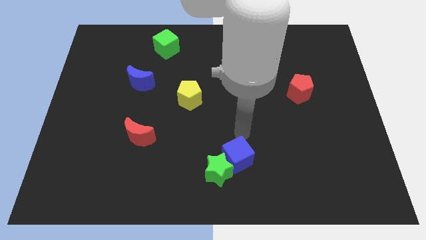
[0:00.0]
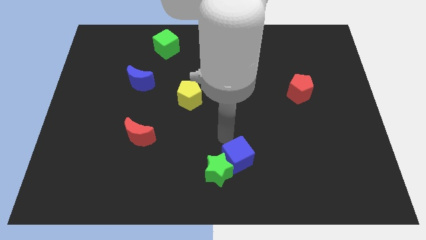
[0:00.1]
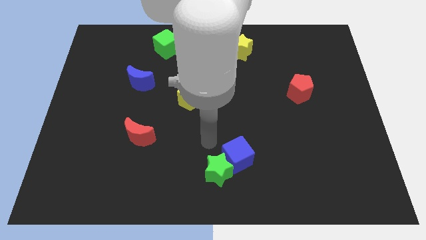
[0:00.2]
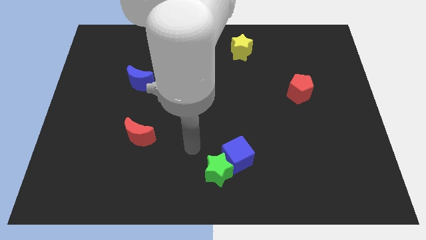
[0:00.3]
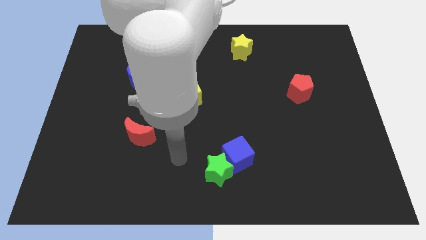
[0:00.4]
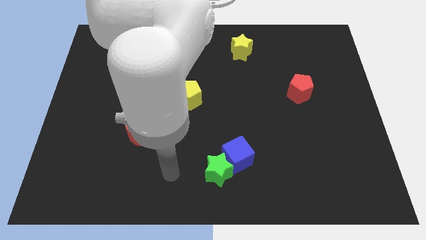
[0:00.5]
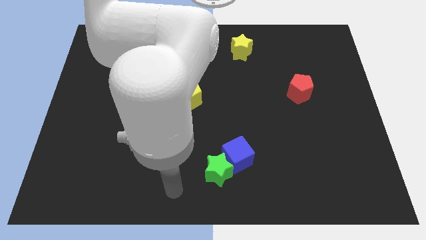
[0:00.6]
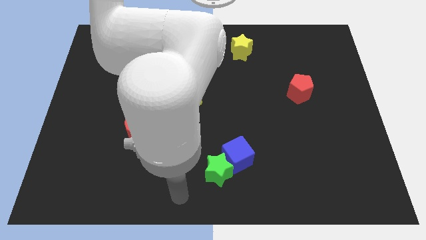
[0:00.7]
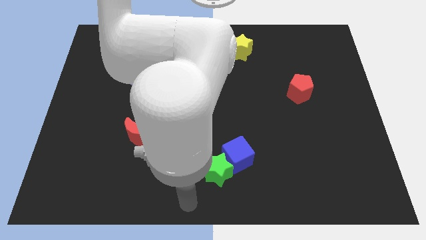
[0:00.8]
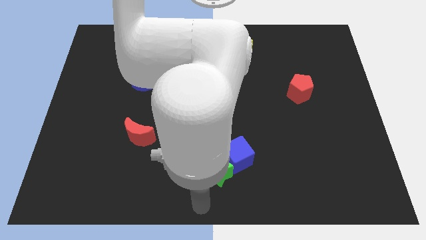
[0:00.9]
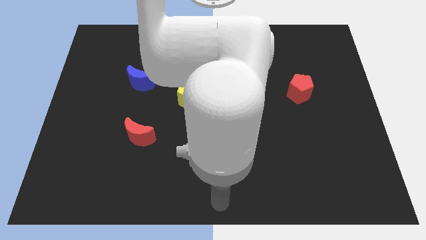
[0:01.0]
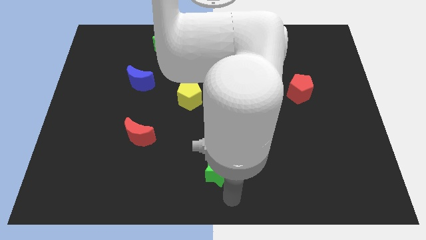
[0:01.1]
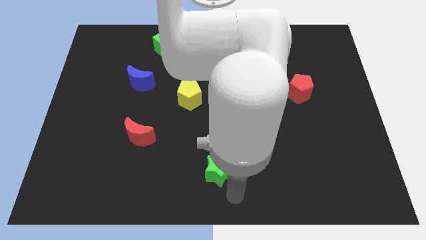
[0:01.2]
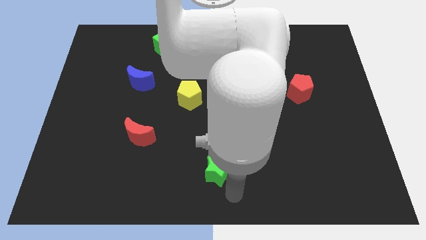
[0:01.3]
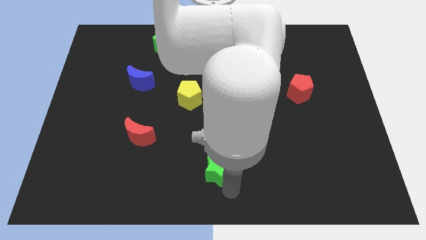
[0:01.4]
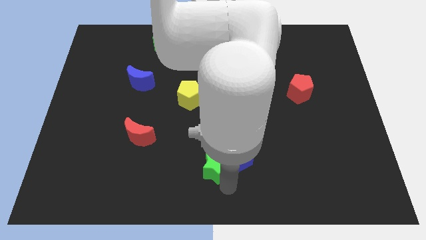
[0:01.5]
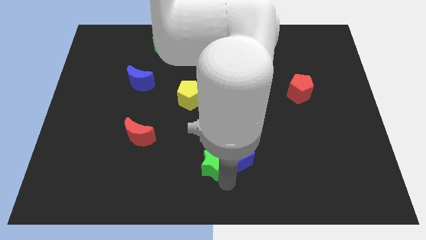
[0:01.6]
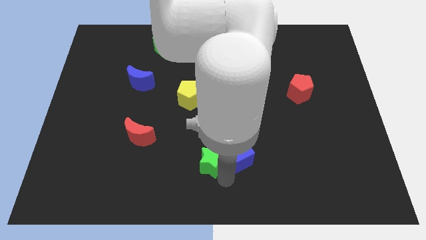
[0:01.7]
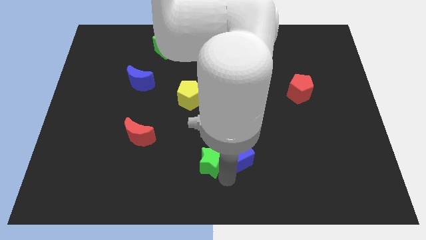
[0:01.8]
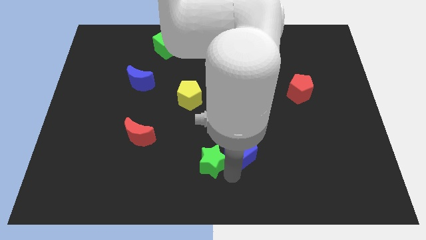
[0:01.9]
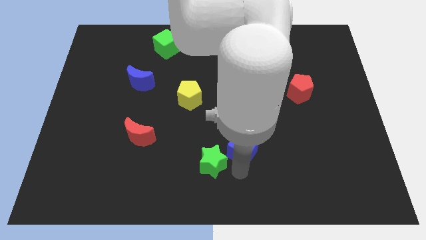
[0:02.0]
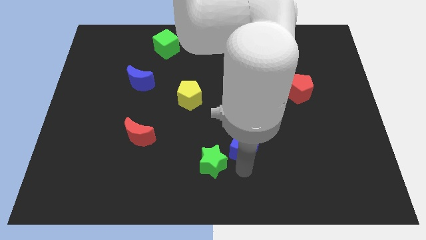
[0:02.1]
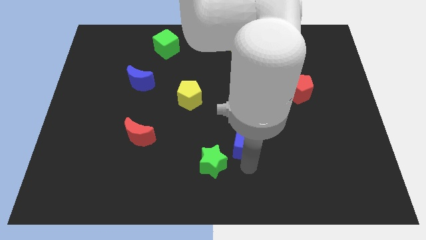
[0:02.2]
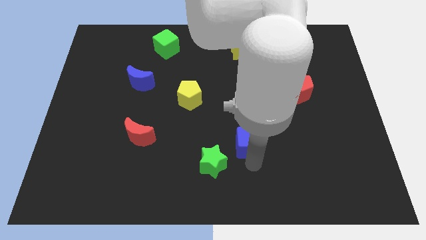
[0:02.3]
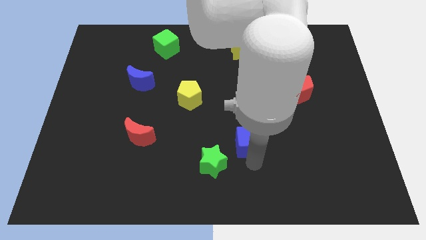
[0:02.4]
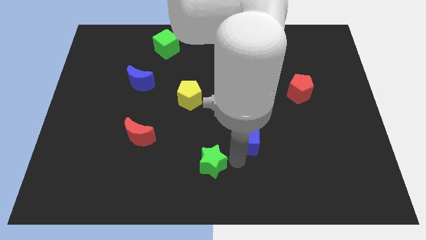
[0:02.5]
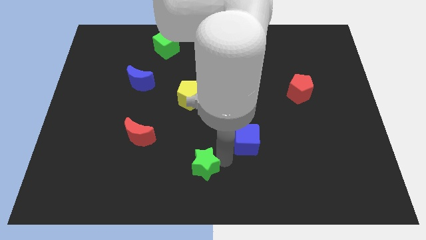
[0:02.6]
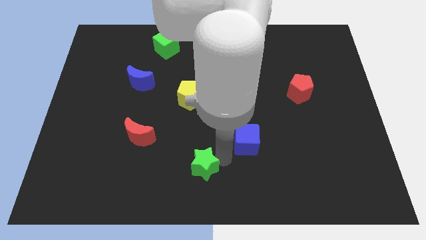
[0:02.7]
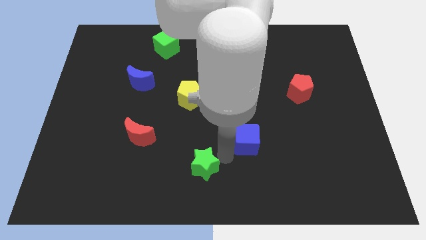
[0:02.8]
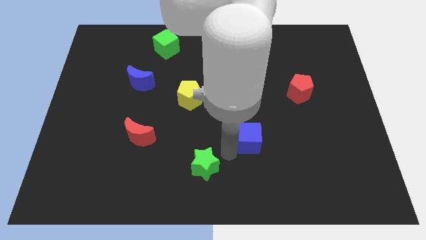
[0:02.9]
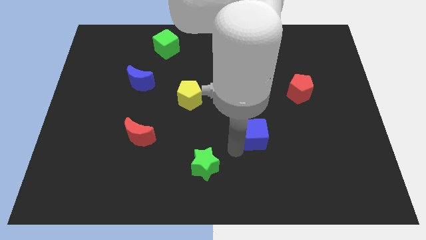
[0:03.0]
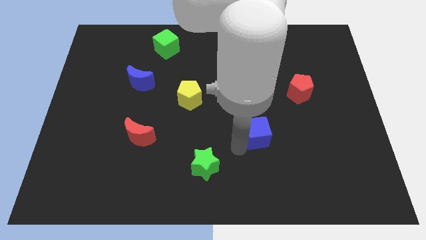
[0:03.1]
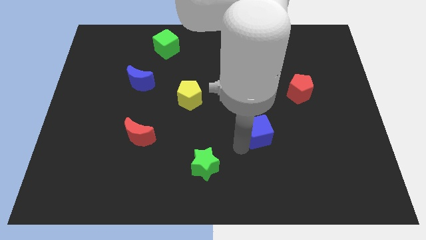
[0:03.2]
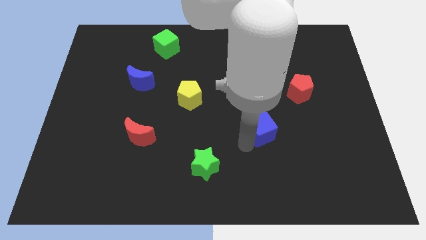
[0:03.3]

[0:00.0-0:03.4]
place the blue cube diagonal to the red pentagon

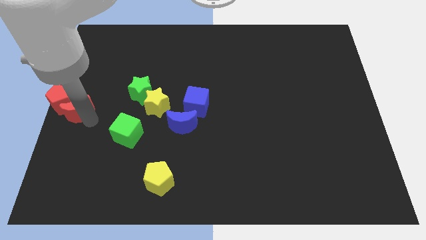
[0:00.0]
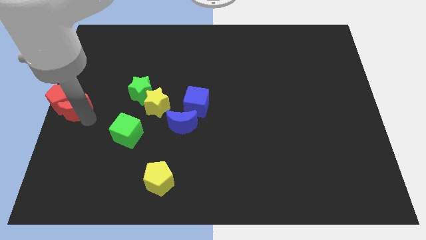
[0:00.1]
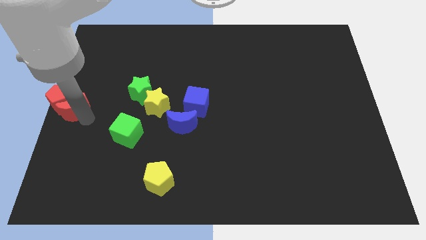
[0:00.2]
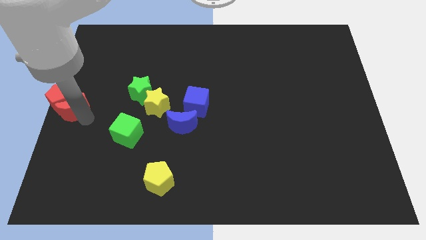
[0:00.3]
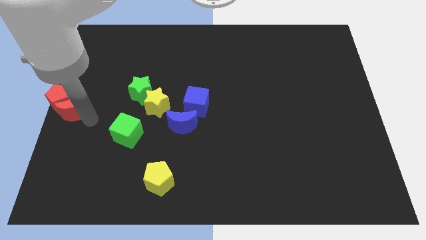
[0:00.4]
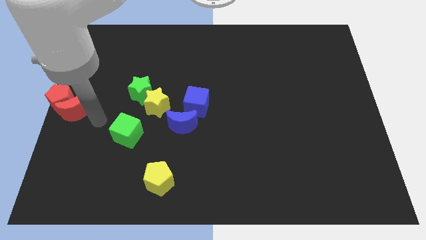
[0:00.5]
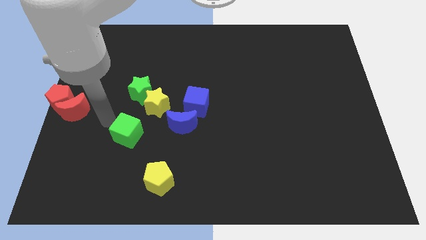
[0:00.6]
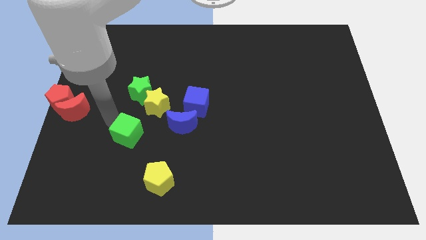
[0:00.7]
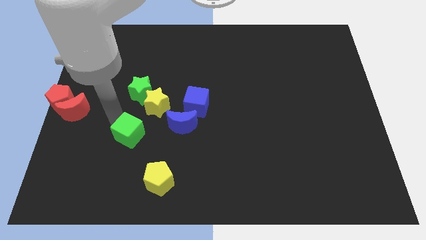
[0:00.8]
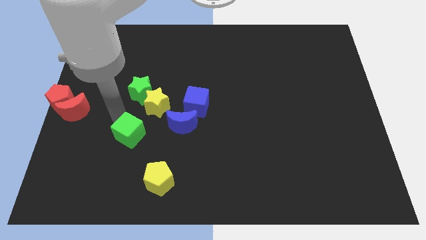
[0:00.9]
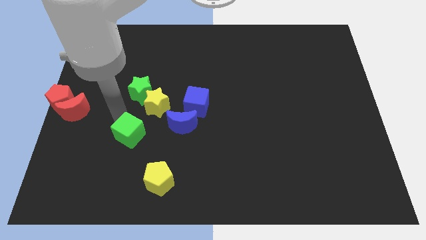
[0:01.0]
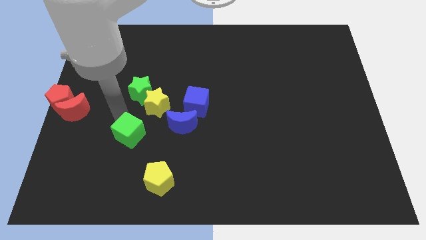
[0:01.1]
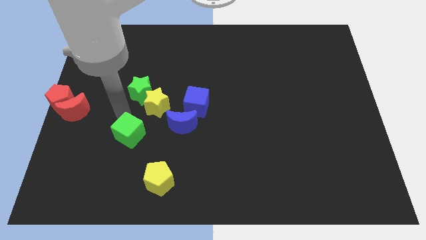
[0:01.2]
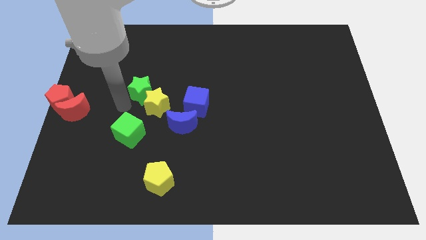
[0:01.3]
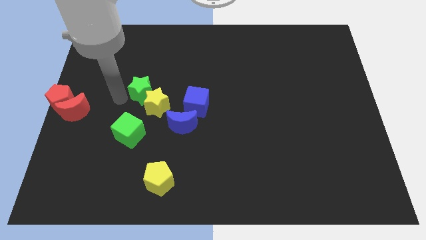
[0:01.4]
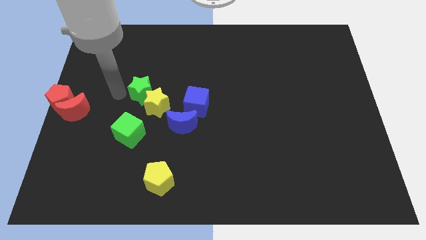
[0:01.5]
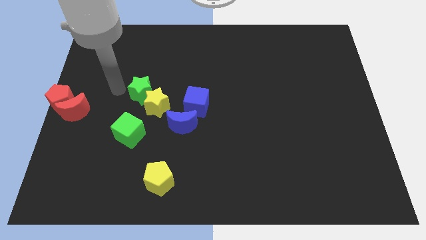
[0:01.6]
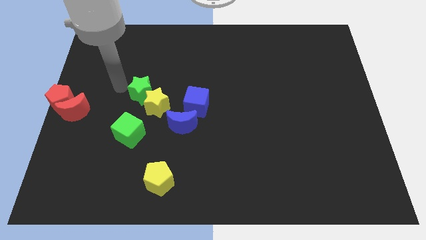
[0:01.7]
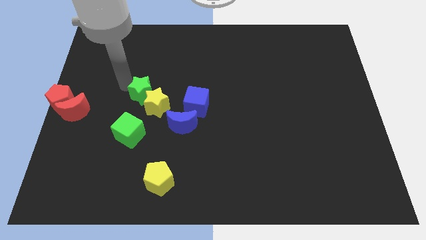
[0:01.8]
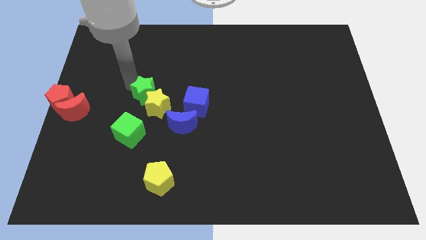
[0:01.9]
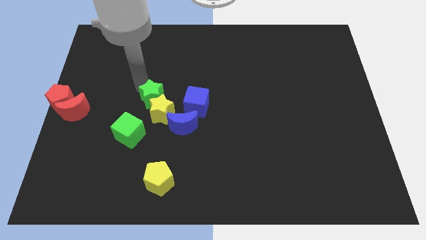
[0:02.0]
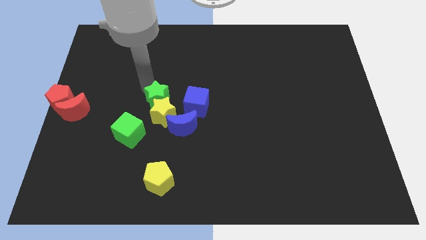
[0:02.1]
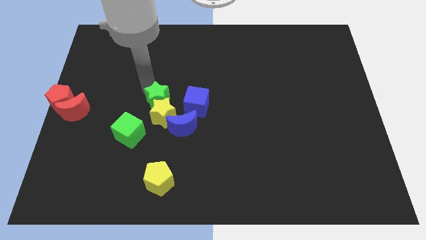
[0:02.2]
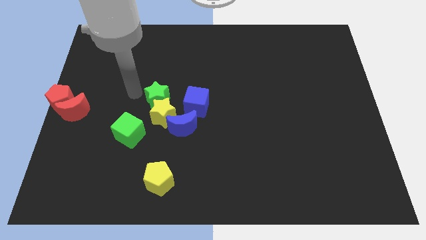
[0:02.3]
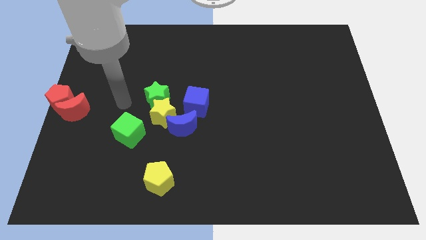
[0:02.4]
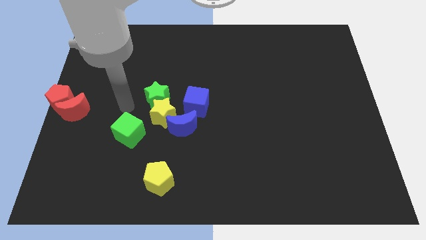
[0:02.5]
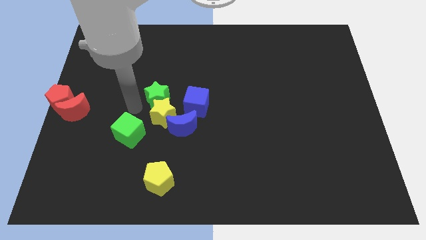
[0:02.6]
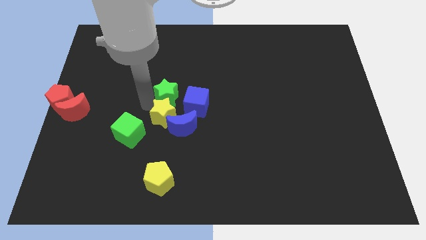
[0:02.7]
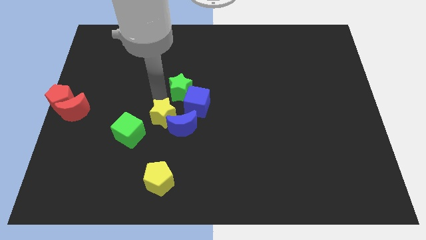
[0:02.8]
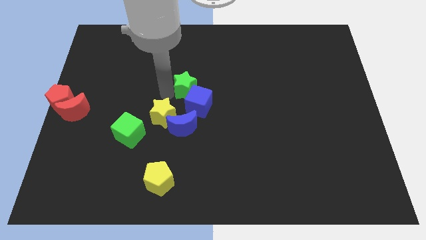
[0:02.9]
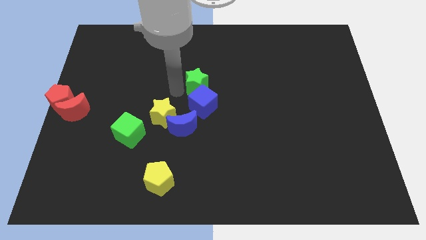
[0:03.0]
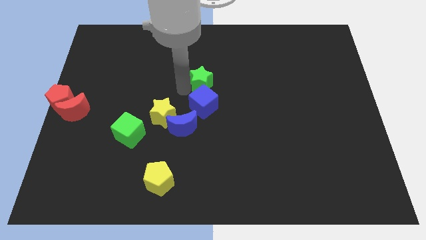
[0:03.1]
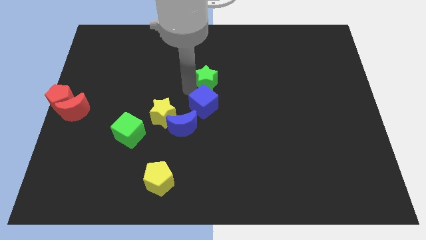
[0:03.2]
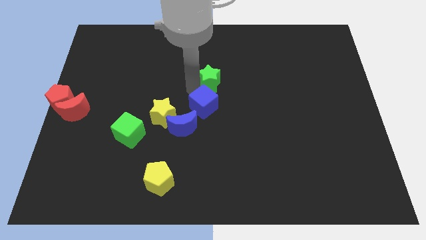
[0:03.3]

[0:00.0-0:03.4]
push the green star to the top side of the blue cube

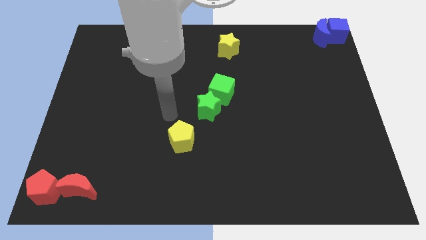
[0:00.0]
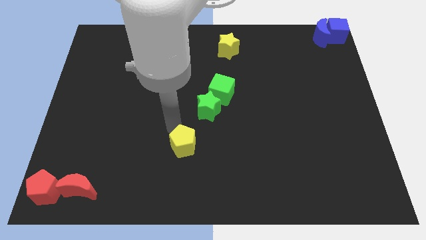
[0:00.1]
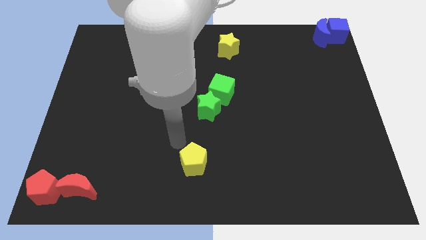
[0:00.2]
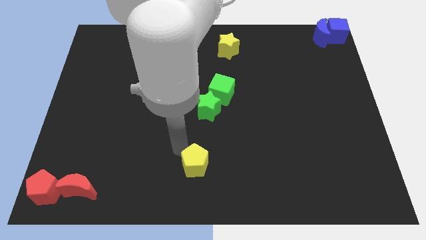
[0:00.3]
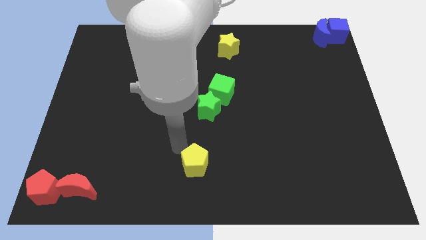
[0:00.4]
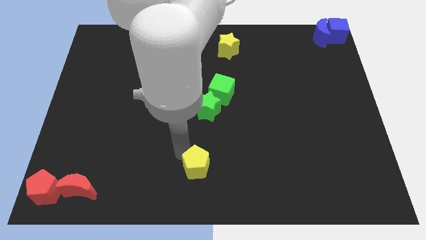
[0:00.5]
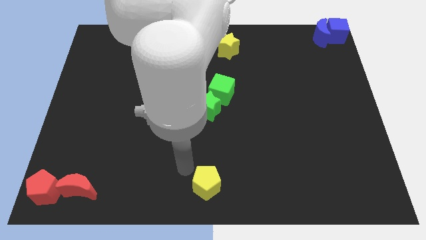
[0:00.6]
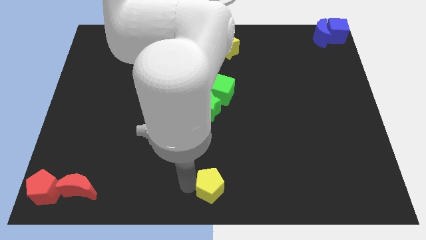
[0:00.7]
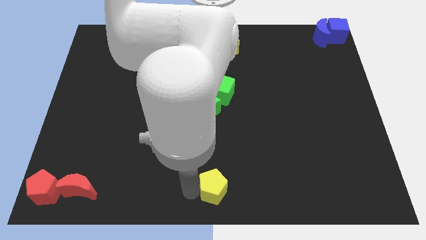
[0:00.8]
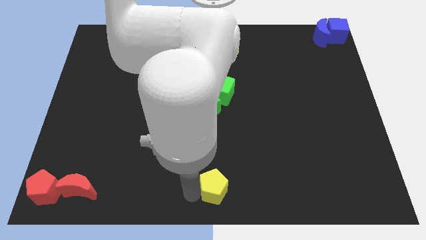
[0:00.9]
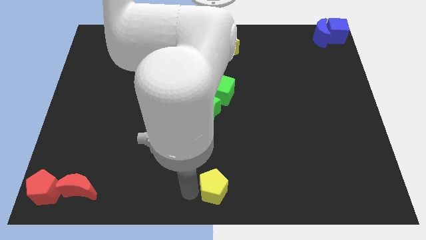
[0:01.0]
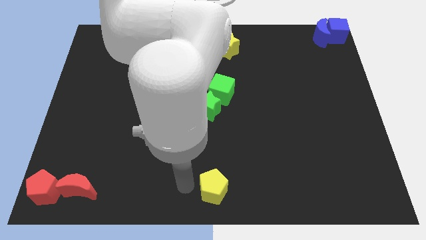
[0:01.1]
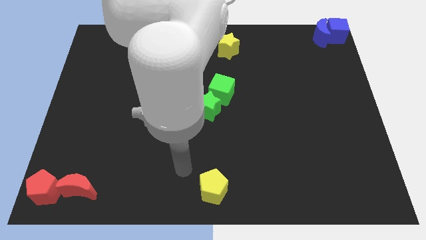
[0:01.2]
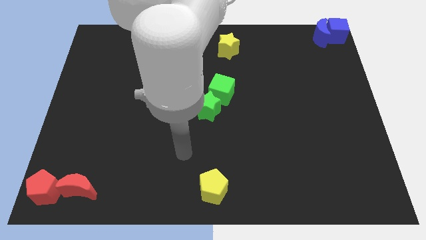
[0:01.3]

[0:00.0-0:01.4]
move the yellow pentagon to the bottom center of the board

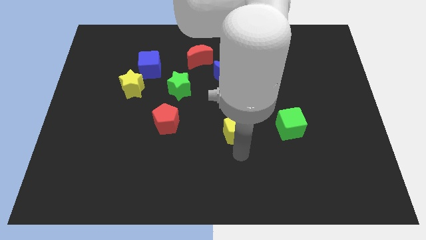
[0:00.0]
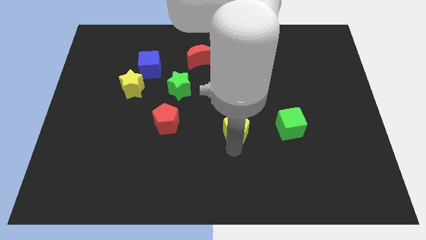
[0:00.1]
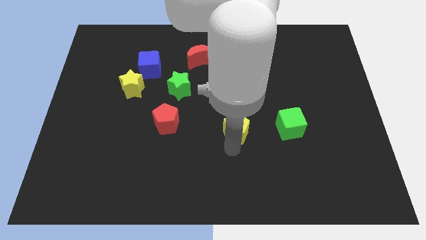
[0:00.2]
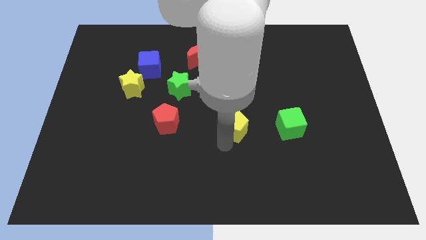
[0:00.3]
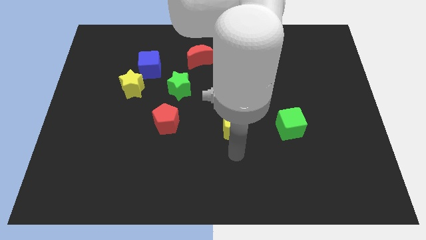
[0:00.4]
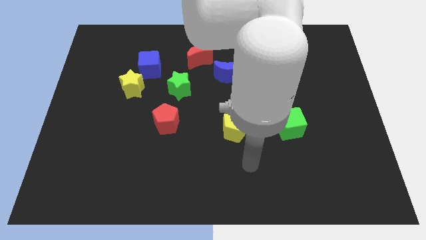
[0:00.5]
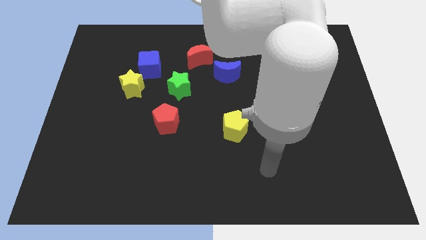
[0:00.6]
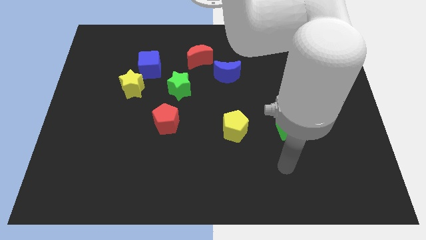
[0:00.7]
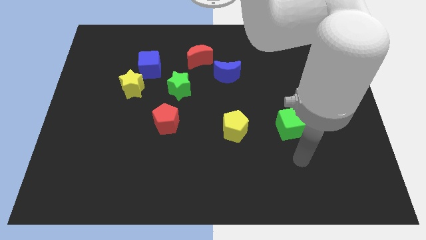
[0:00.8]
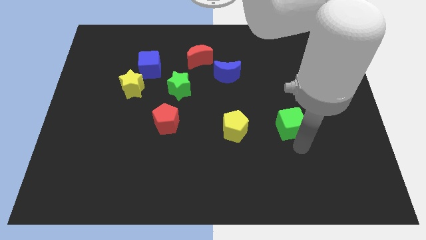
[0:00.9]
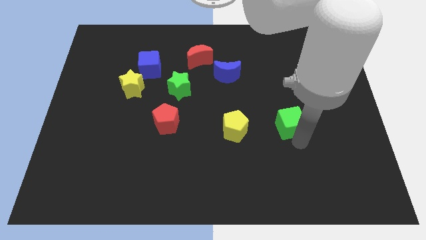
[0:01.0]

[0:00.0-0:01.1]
place the arm down to the green cube
